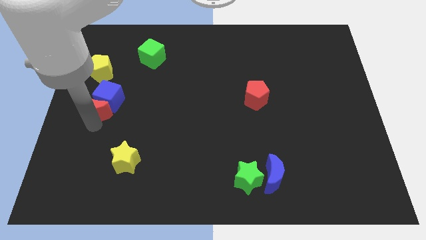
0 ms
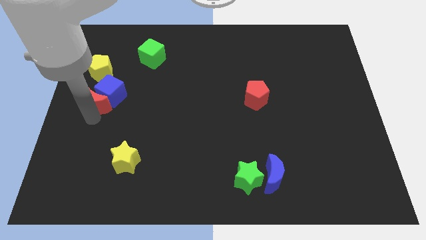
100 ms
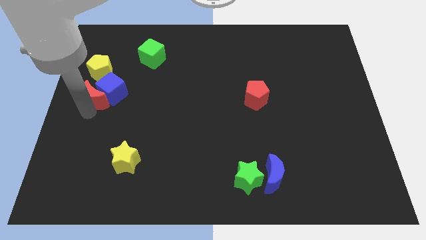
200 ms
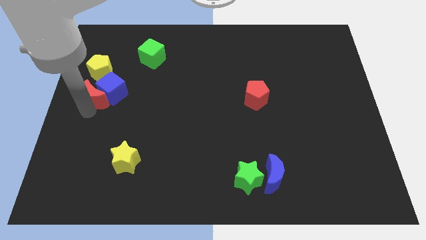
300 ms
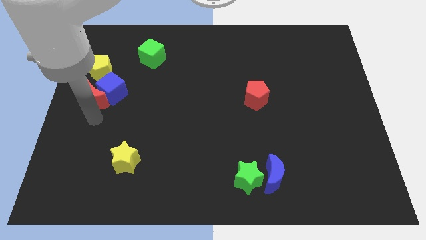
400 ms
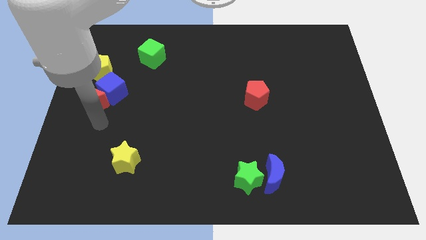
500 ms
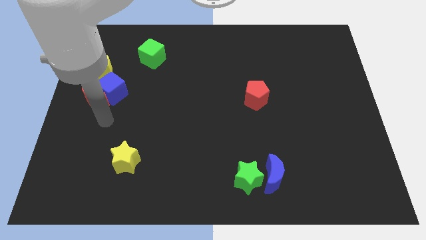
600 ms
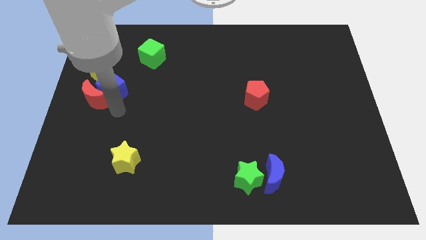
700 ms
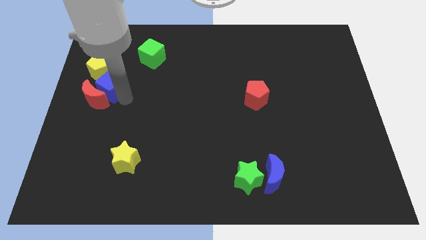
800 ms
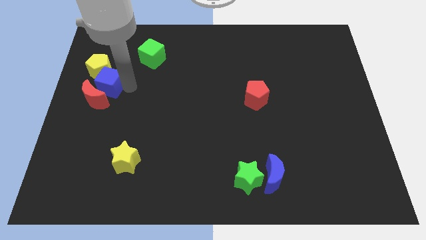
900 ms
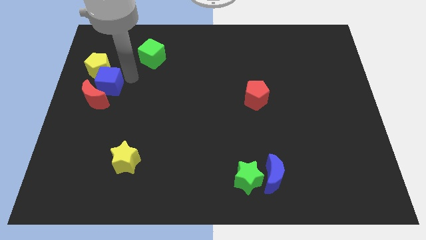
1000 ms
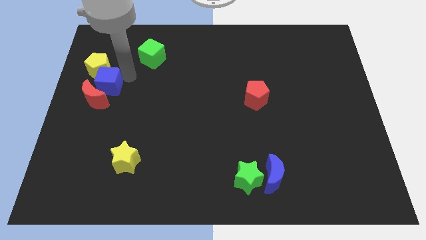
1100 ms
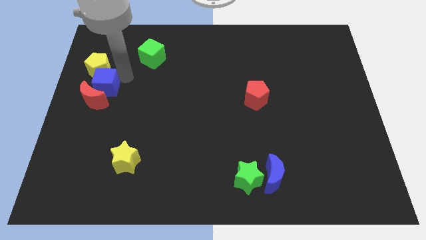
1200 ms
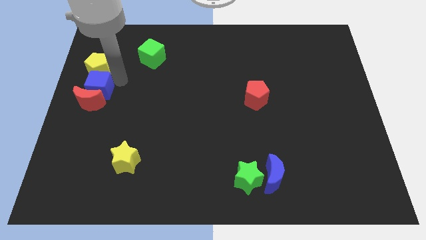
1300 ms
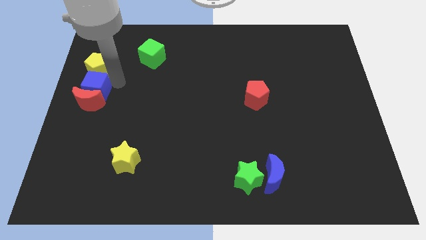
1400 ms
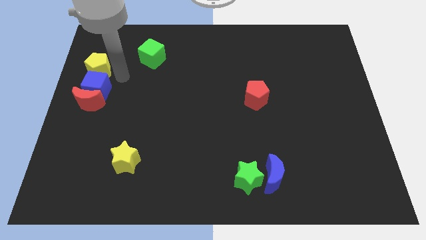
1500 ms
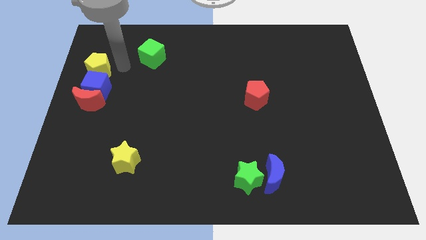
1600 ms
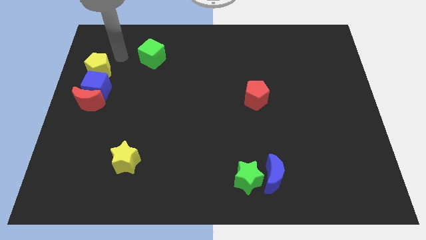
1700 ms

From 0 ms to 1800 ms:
push the blue cube and red moon below into the yellow pentagon

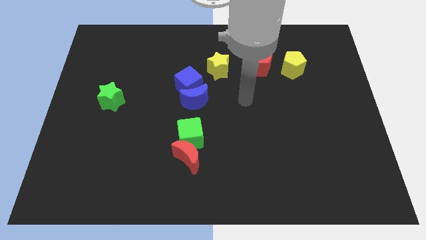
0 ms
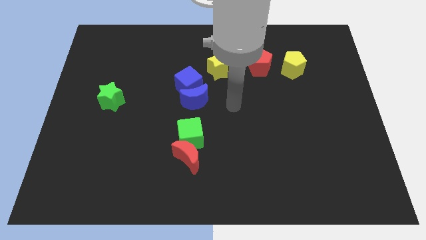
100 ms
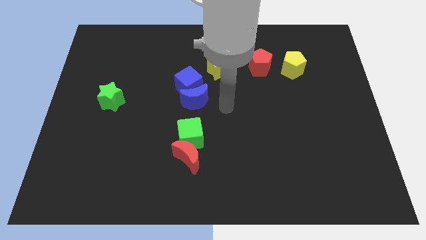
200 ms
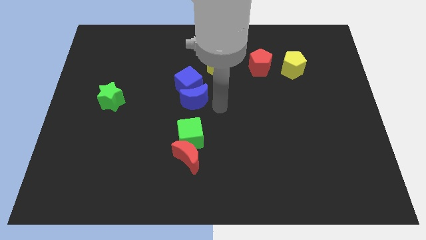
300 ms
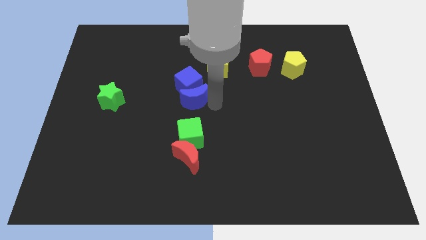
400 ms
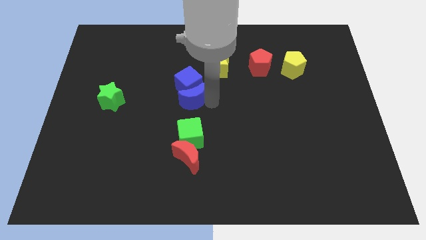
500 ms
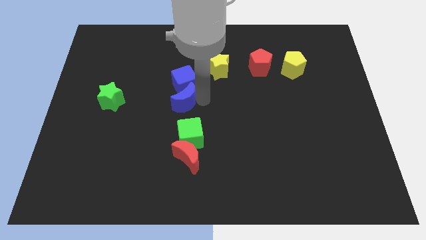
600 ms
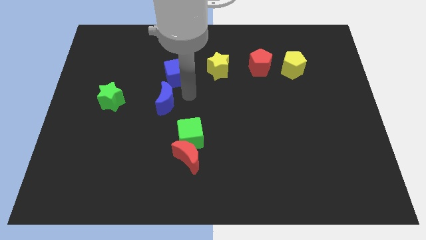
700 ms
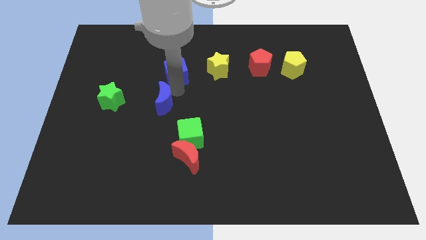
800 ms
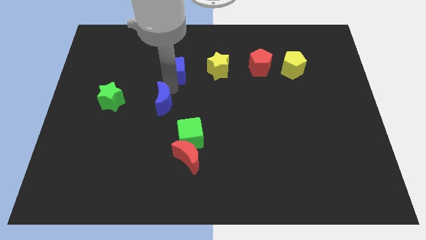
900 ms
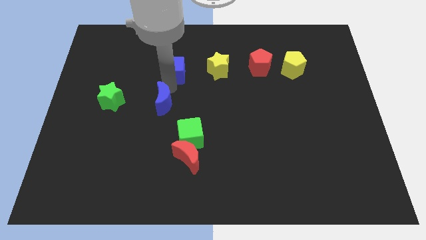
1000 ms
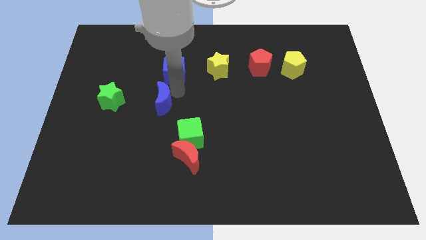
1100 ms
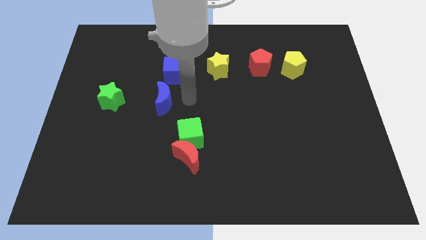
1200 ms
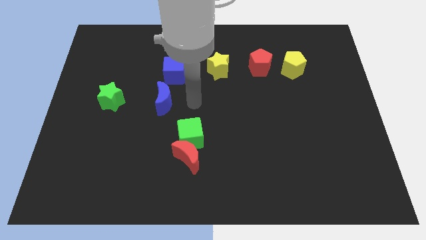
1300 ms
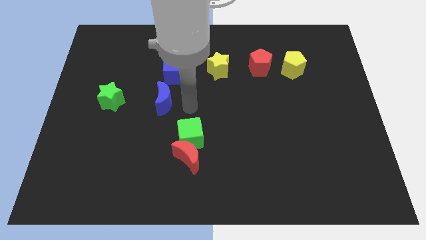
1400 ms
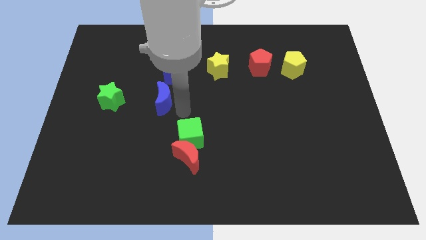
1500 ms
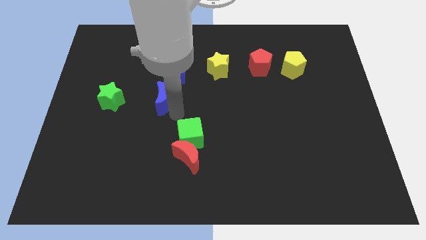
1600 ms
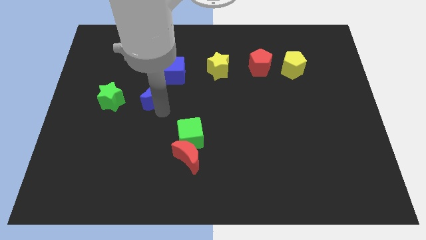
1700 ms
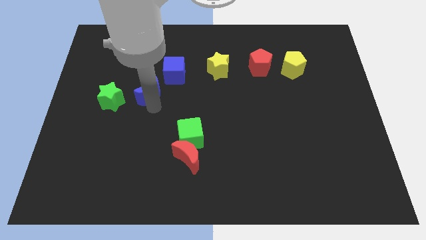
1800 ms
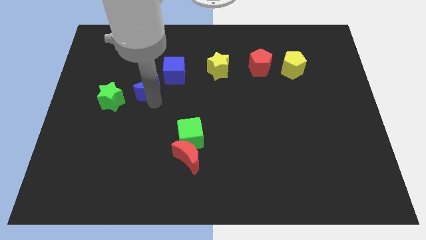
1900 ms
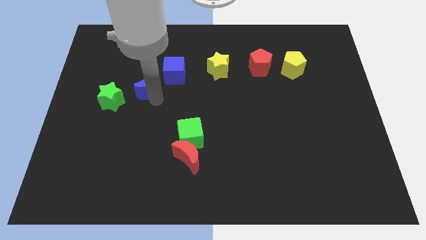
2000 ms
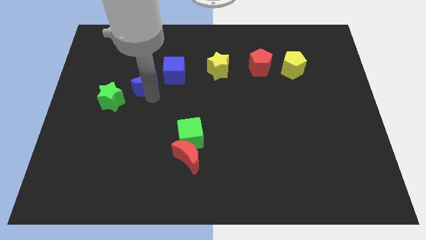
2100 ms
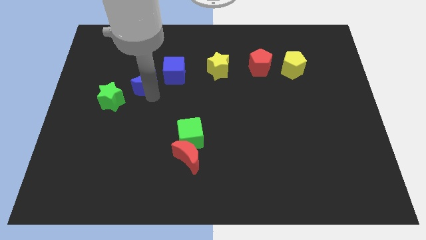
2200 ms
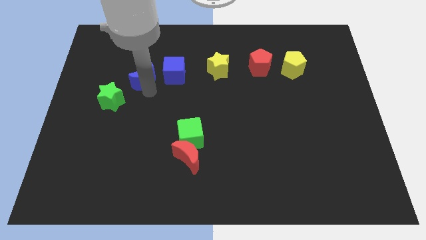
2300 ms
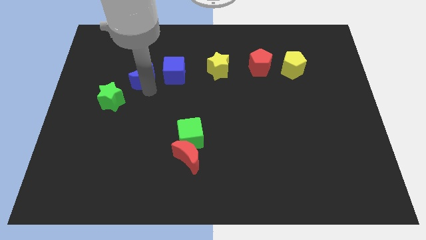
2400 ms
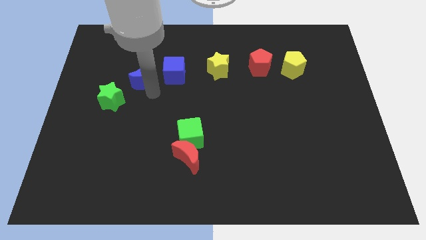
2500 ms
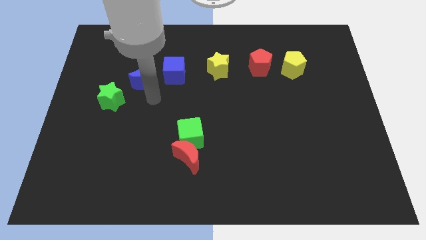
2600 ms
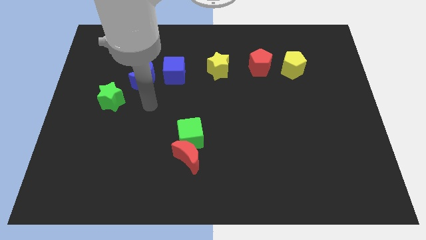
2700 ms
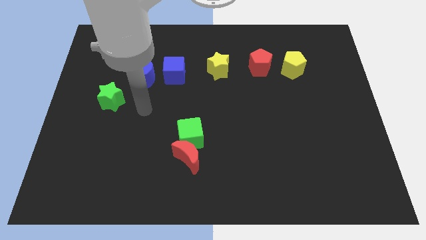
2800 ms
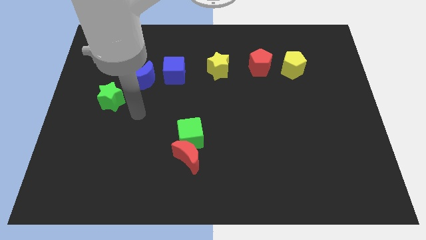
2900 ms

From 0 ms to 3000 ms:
push the blue moon to the left side of the blue cube

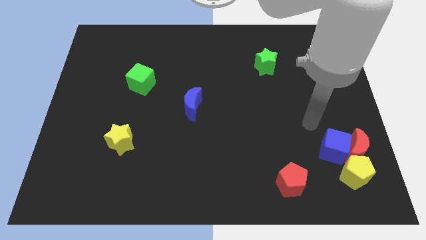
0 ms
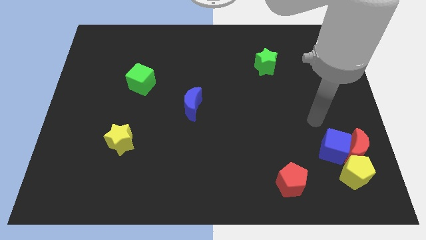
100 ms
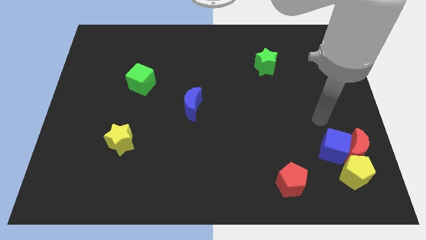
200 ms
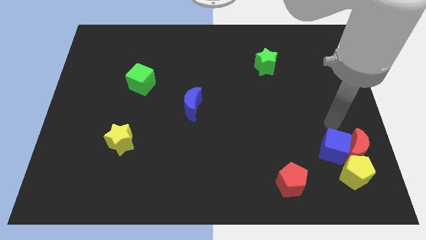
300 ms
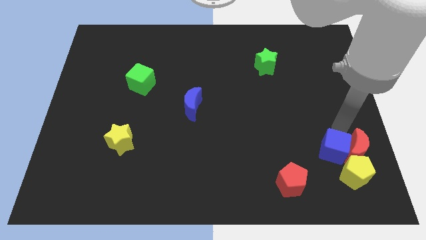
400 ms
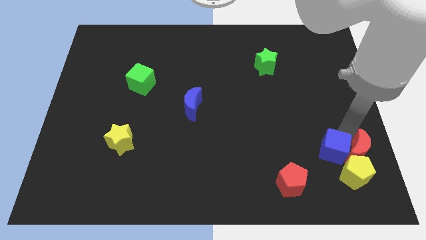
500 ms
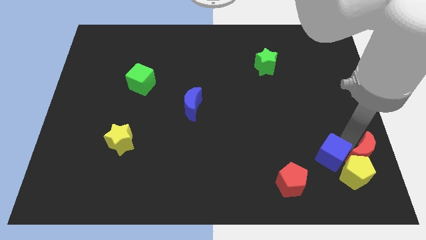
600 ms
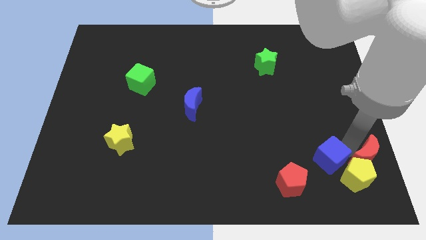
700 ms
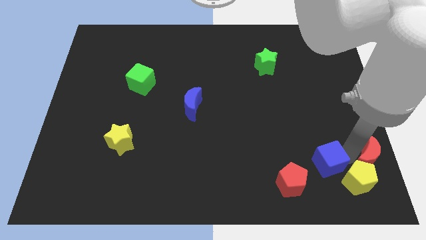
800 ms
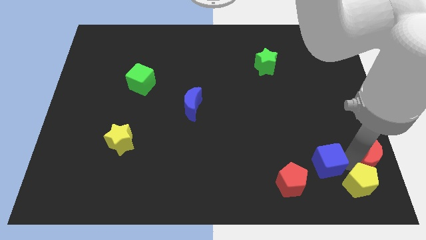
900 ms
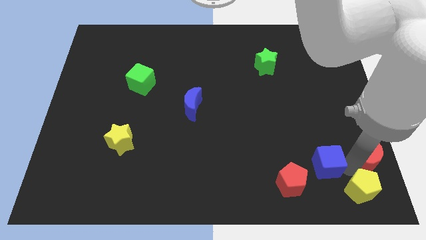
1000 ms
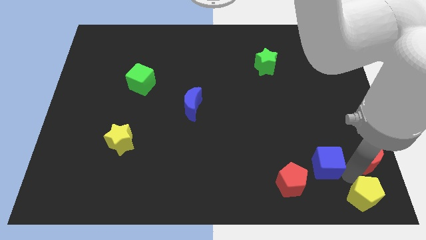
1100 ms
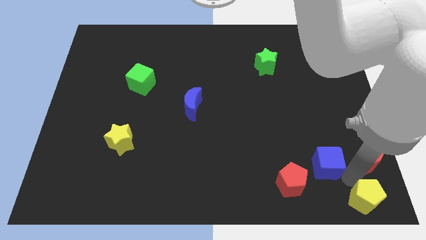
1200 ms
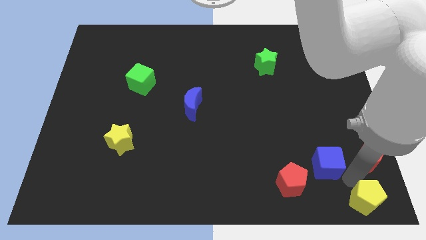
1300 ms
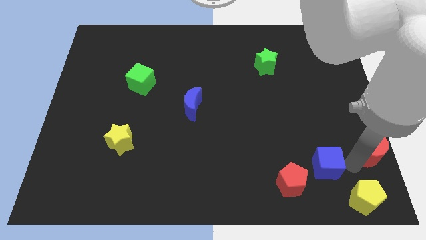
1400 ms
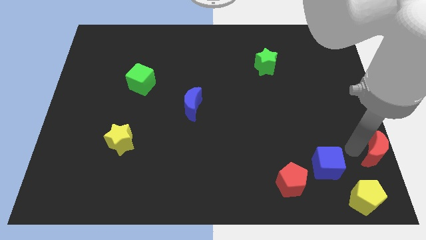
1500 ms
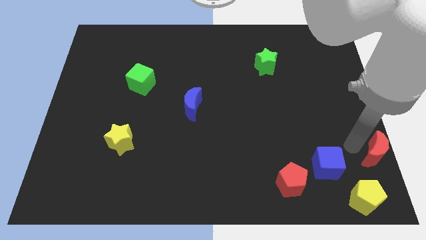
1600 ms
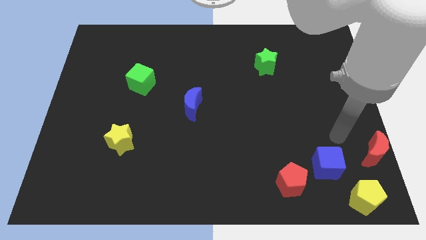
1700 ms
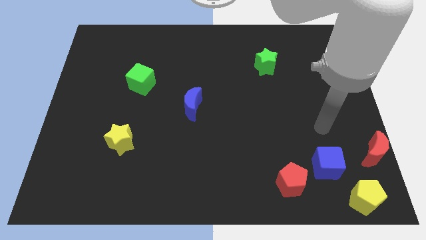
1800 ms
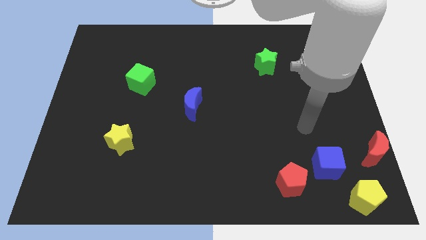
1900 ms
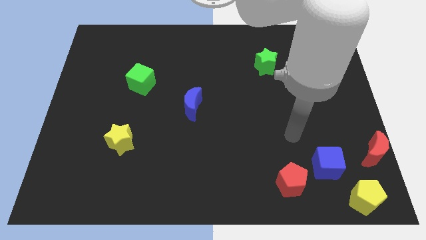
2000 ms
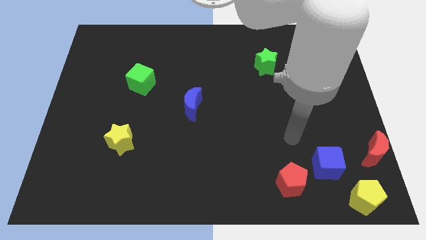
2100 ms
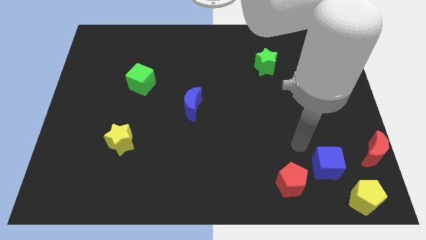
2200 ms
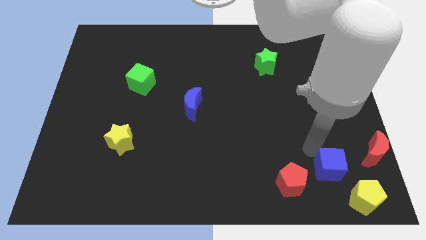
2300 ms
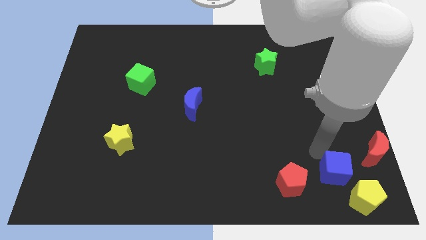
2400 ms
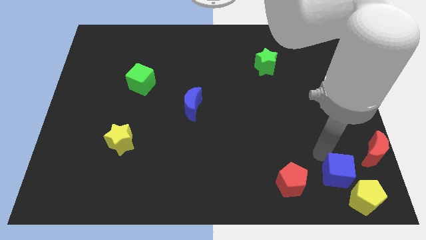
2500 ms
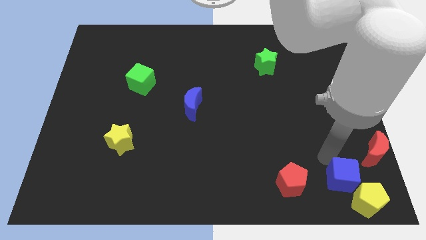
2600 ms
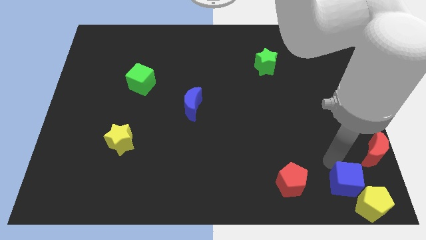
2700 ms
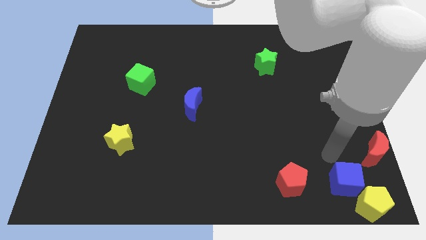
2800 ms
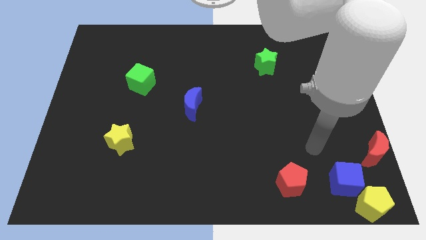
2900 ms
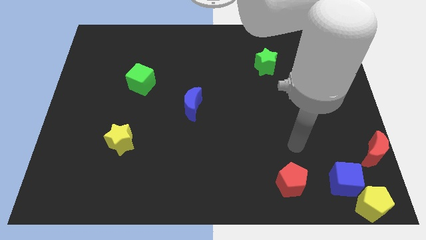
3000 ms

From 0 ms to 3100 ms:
push the yellow pentagon and blue cube to the bottom right corner of the board

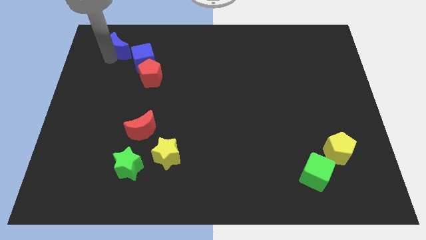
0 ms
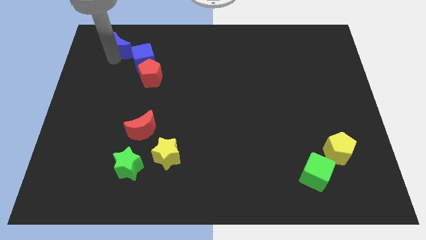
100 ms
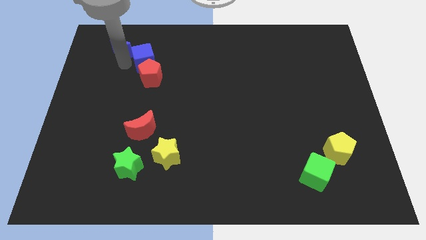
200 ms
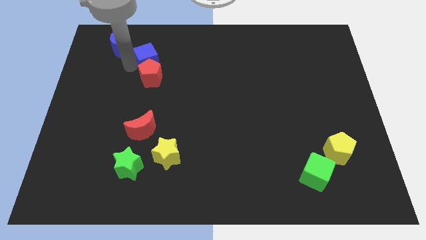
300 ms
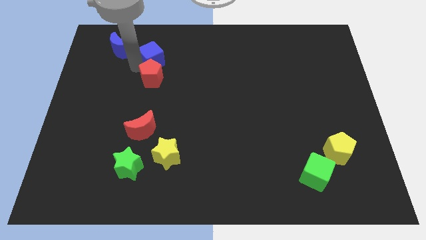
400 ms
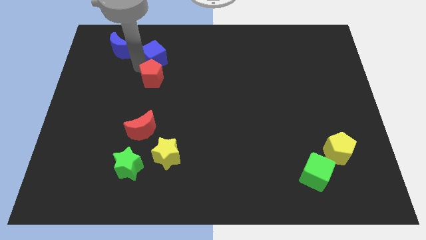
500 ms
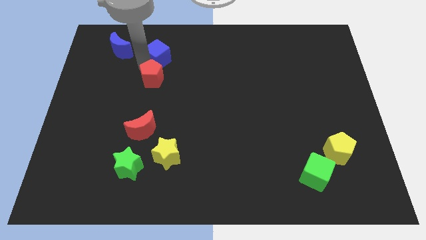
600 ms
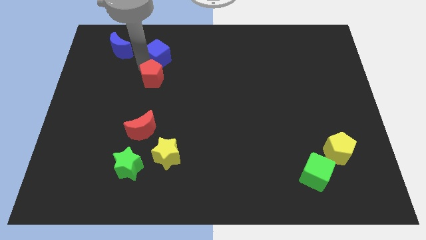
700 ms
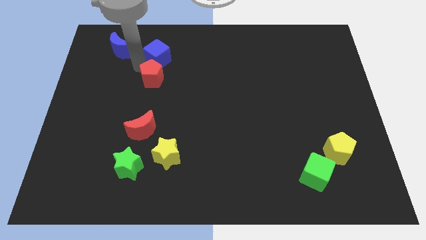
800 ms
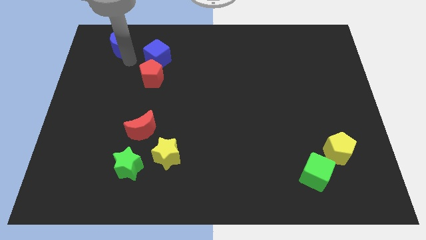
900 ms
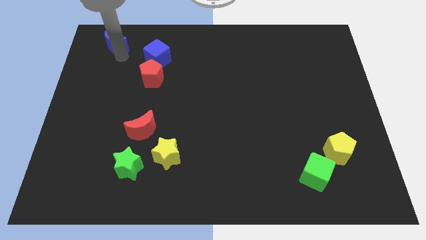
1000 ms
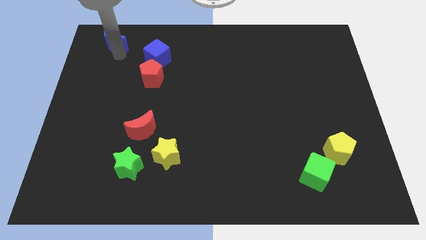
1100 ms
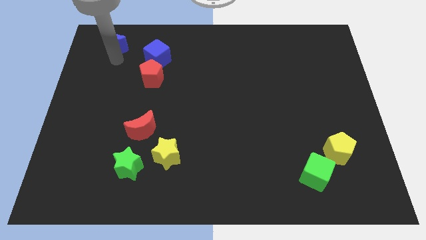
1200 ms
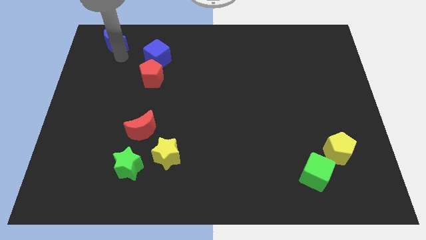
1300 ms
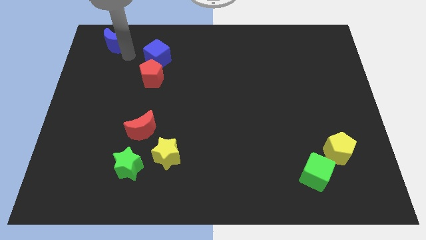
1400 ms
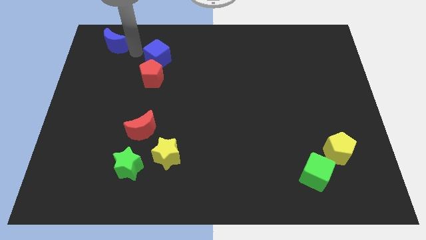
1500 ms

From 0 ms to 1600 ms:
separate the blue cubes
